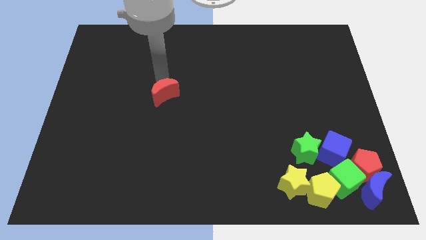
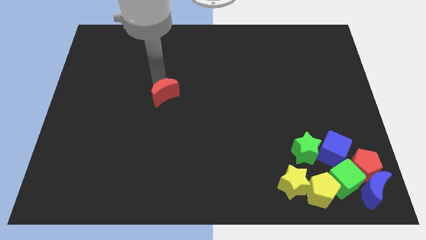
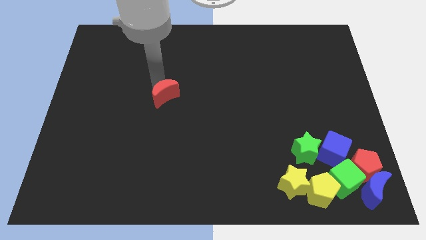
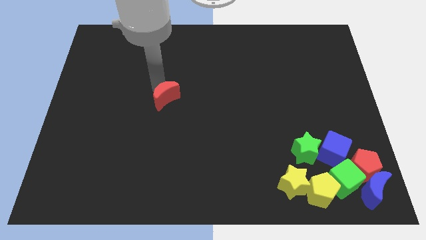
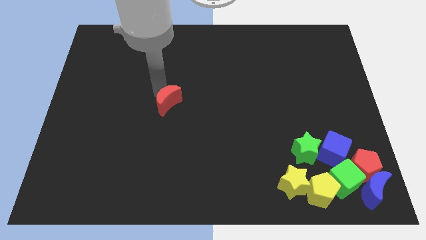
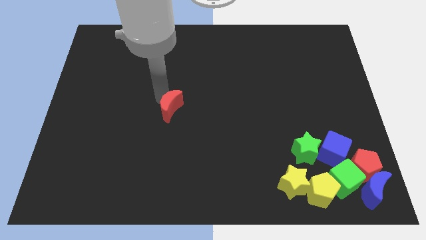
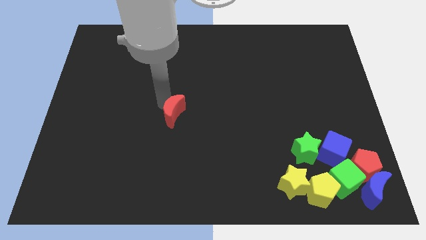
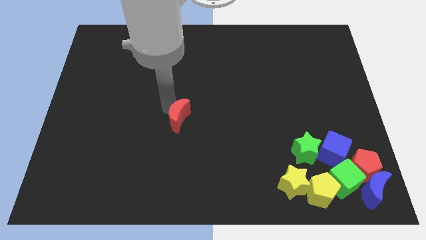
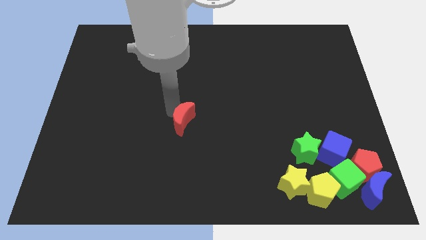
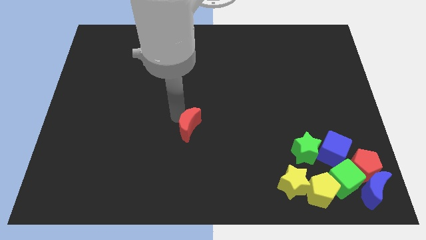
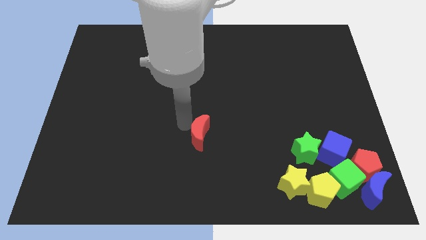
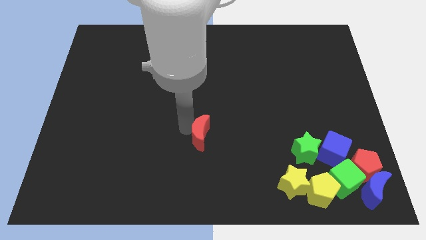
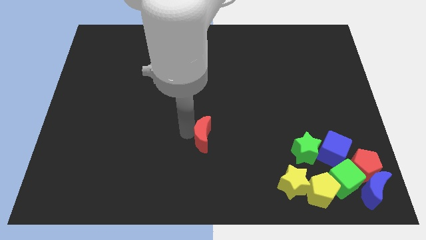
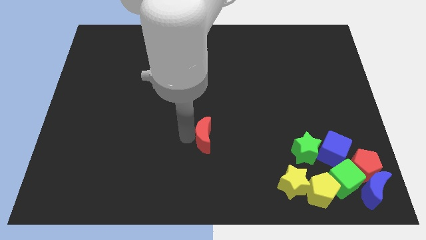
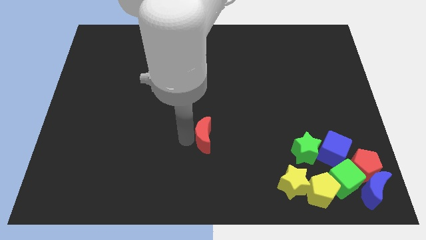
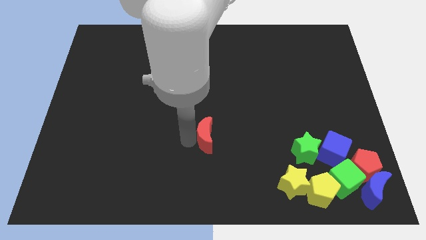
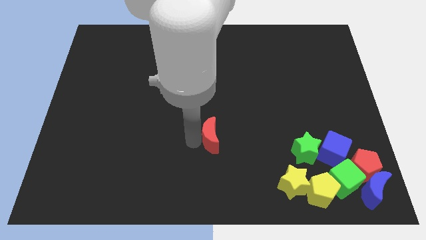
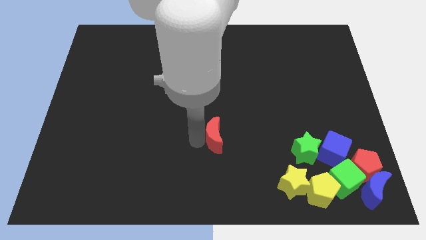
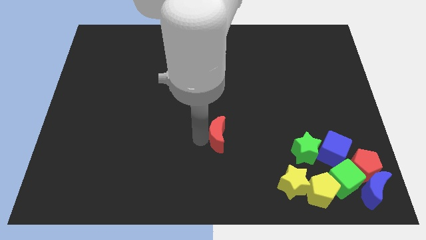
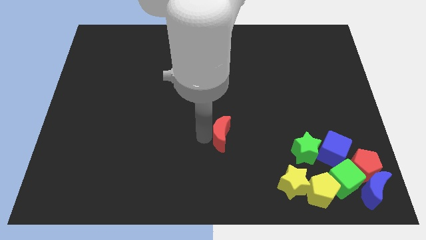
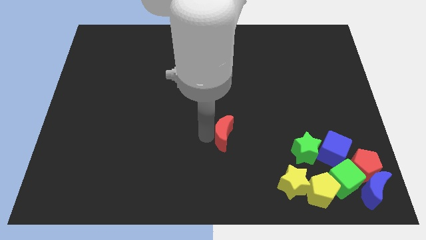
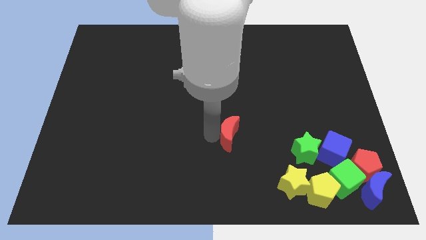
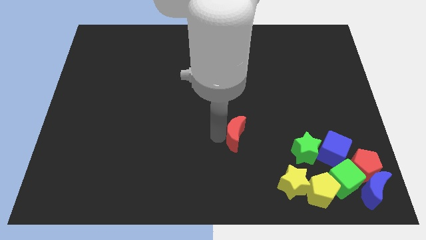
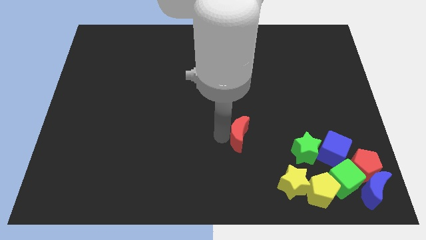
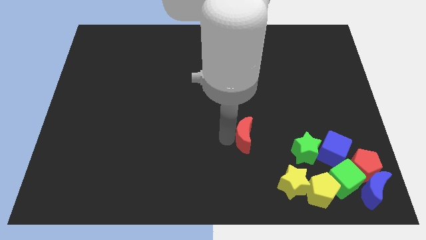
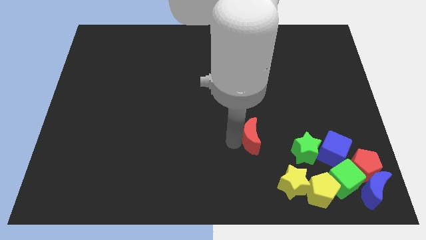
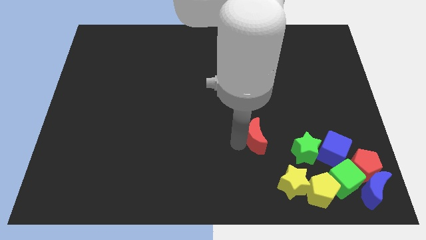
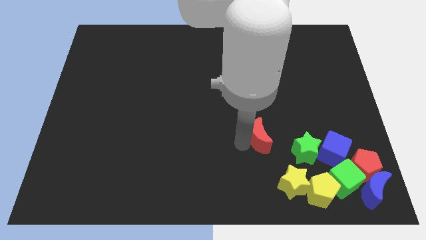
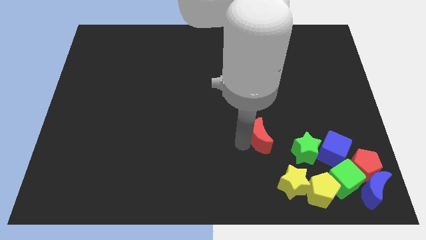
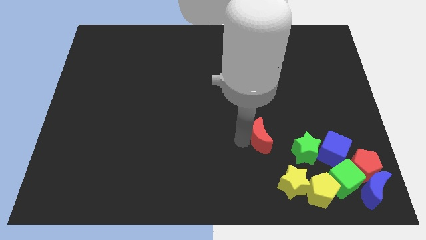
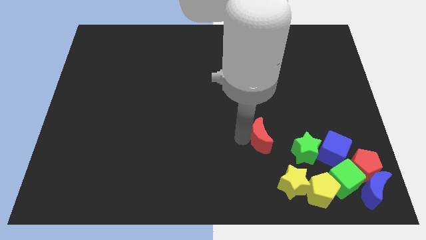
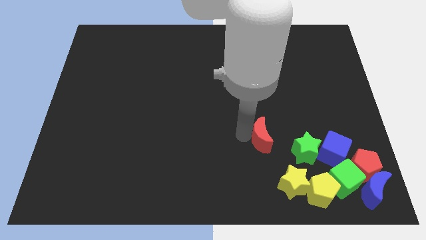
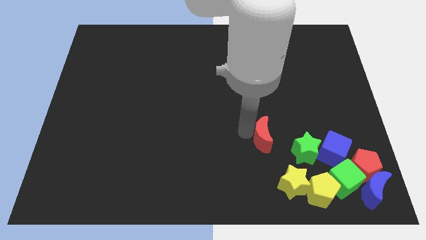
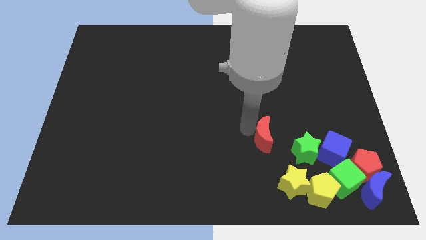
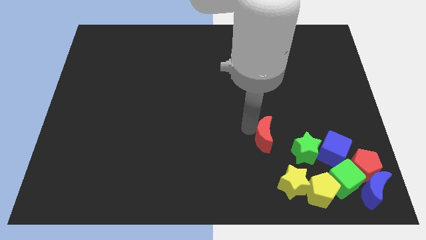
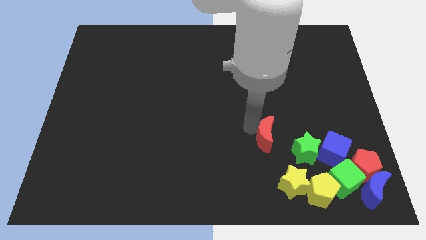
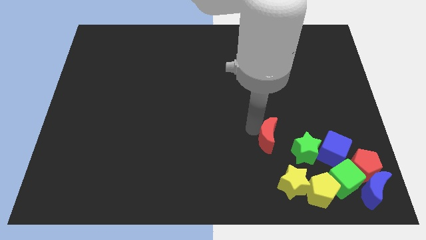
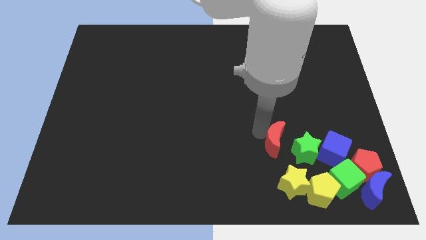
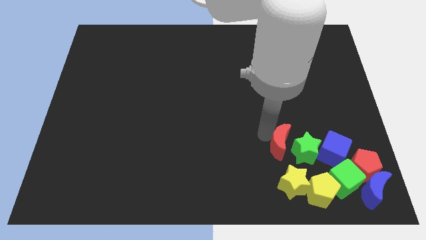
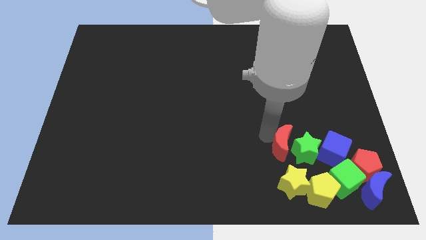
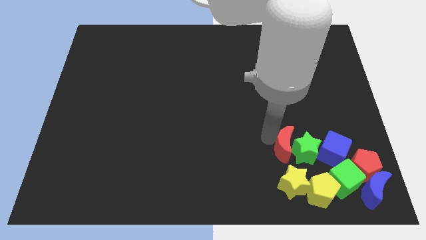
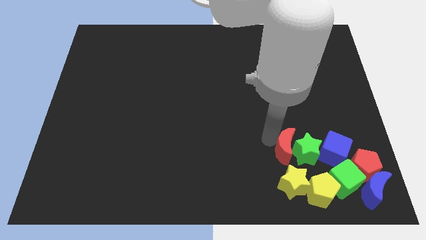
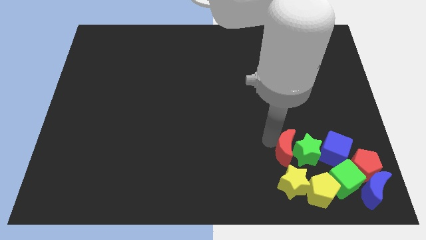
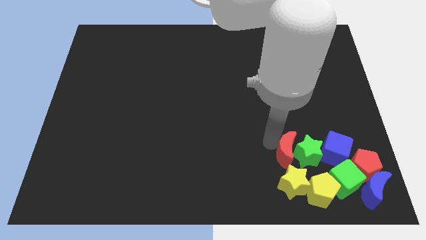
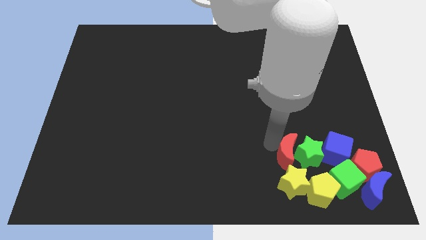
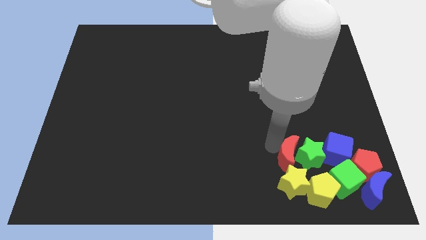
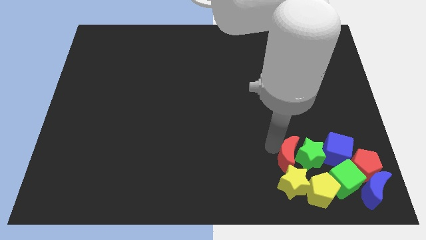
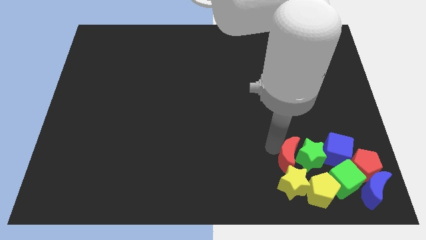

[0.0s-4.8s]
place red crescent into left of green star

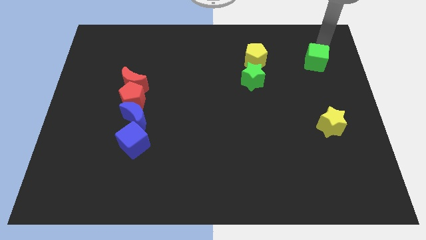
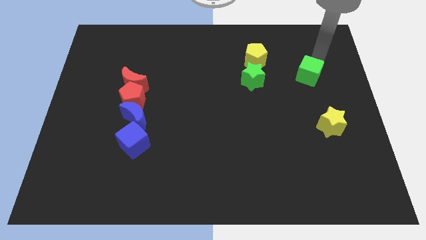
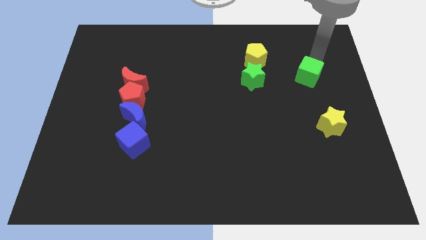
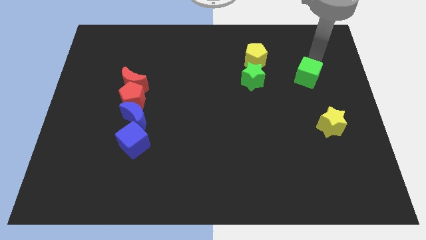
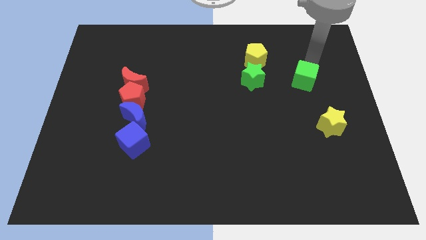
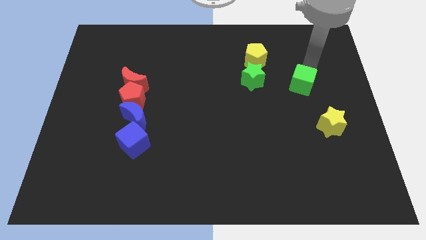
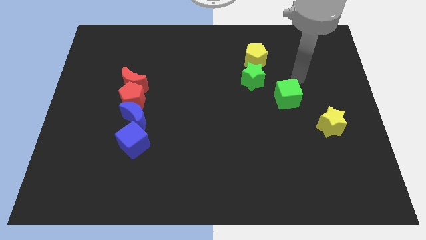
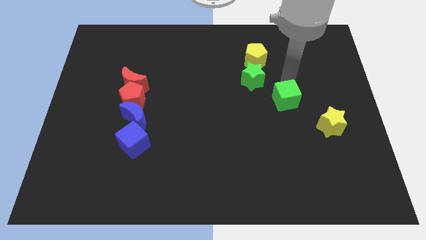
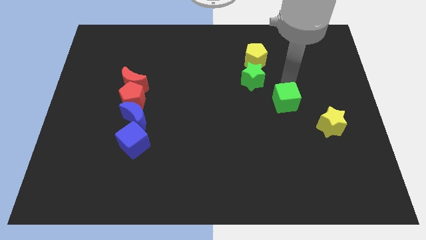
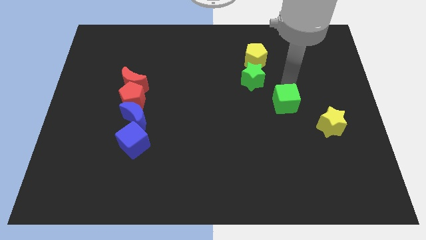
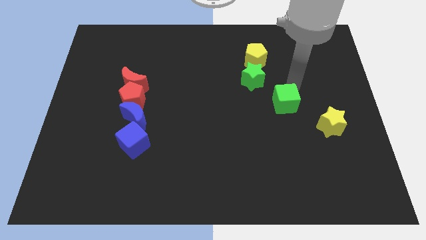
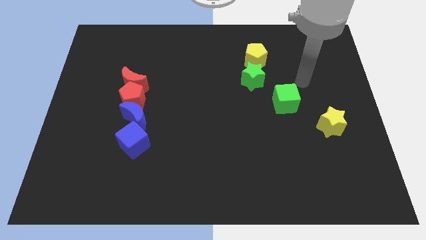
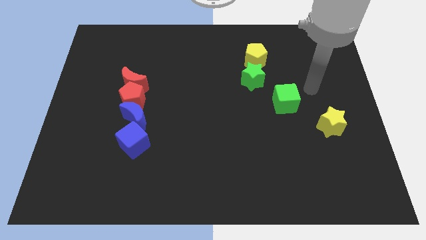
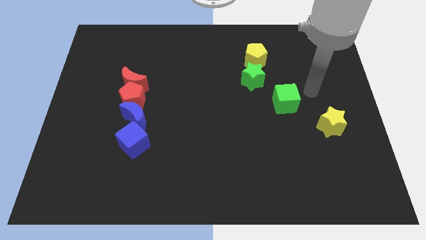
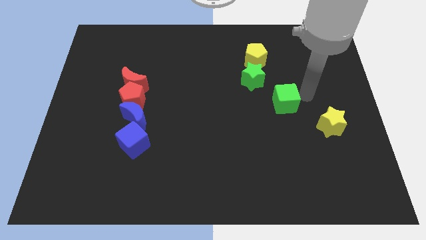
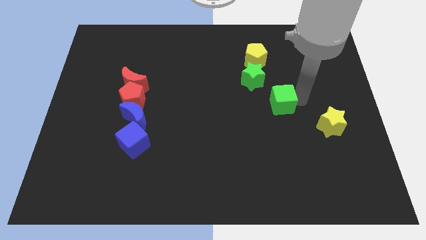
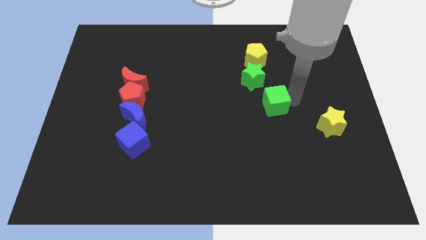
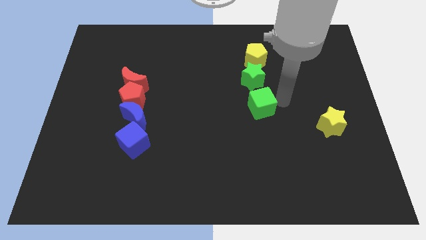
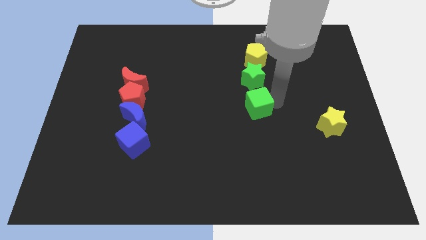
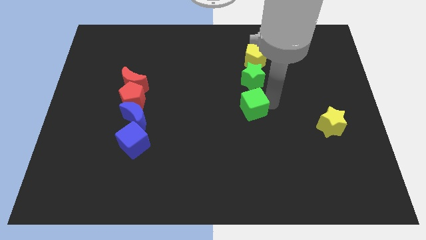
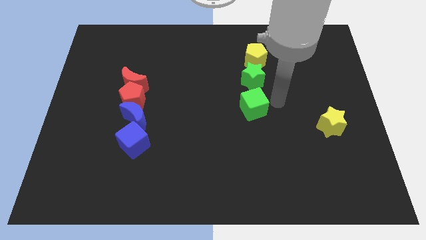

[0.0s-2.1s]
place the green cube below the green star

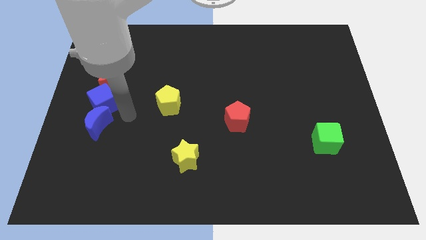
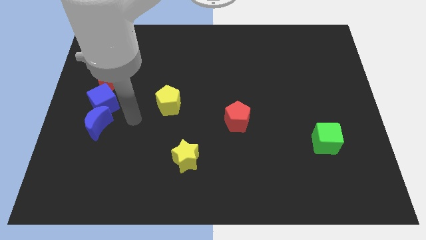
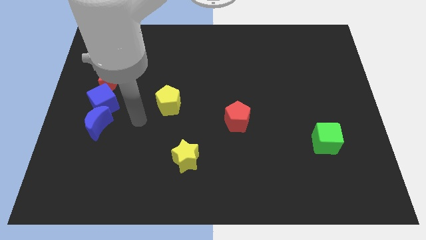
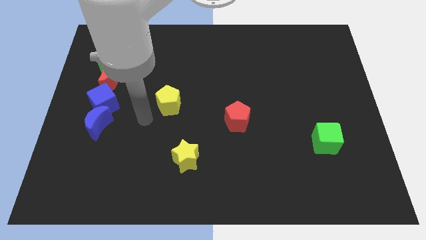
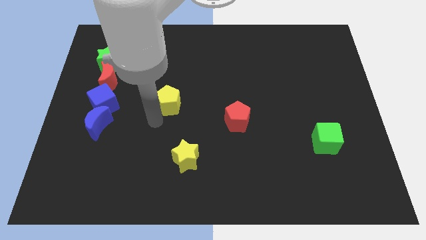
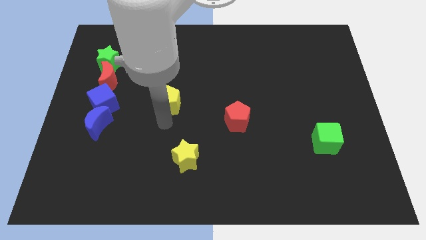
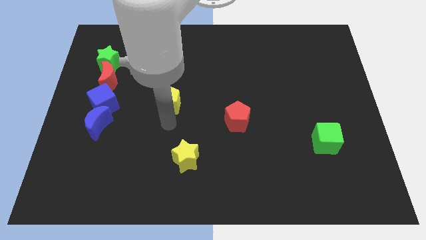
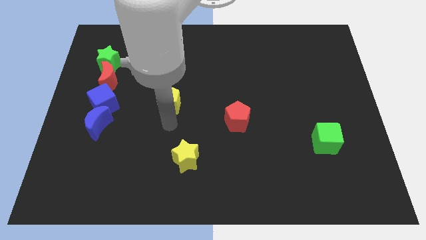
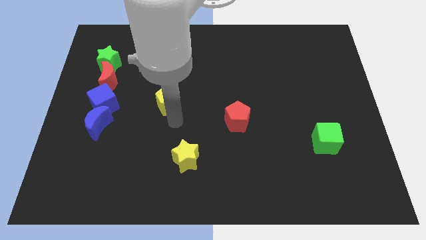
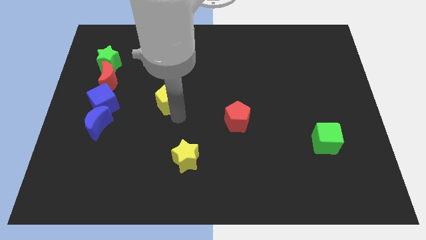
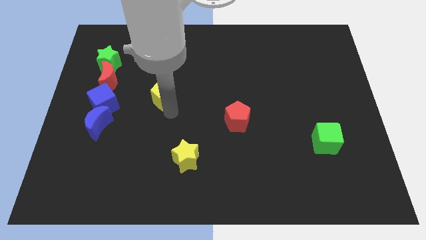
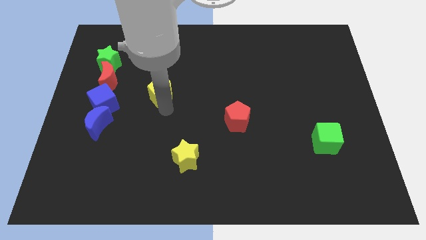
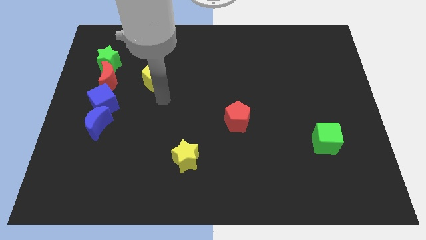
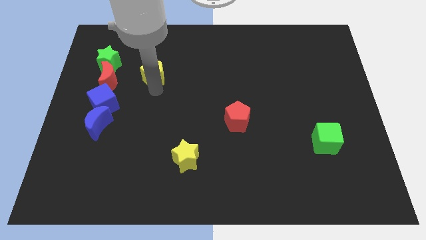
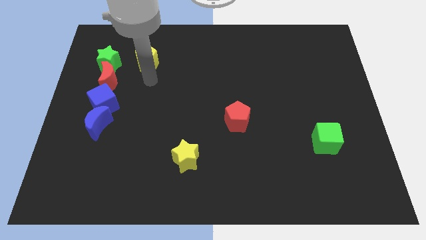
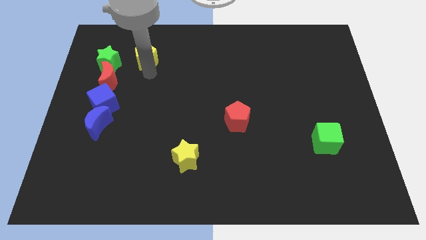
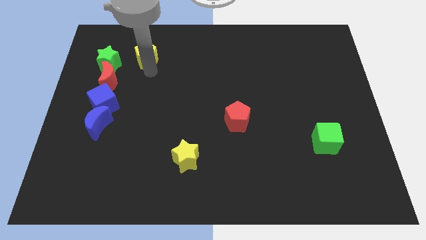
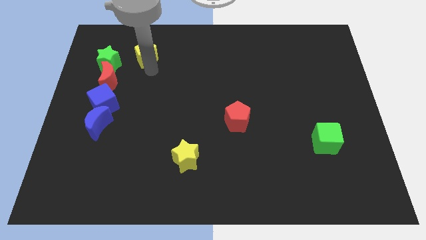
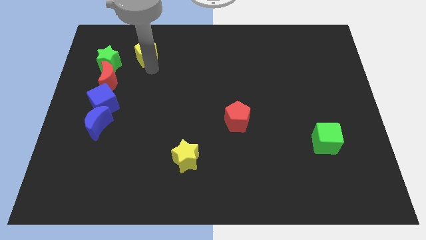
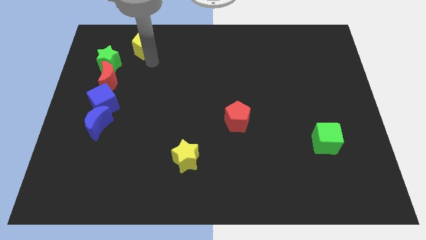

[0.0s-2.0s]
put the yellow pentagon right to the green star
